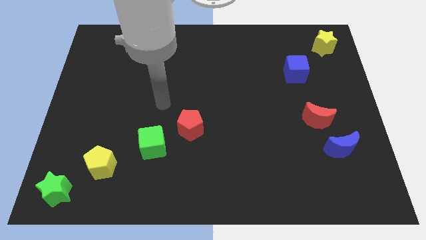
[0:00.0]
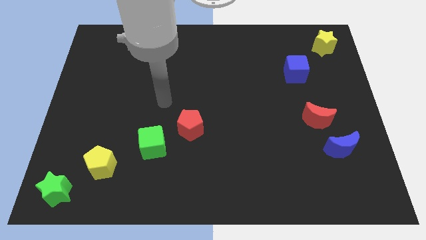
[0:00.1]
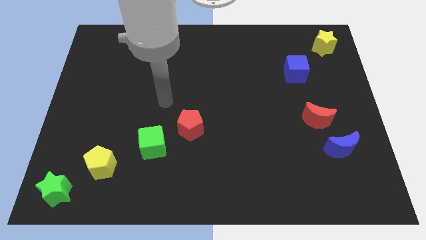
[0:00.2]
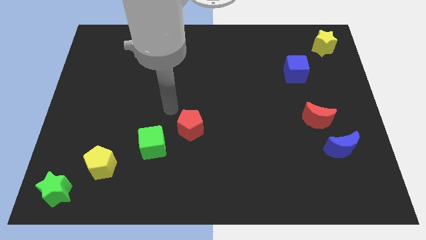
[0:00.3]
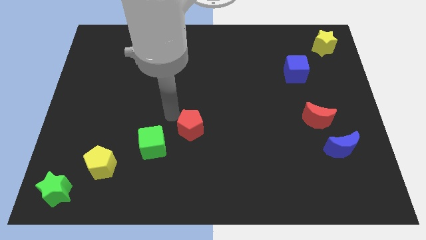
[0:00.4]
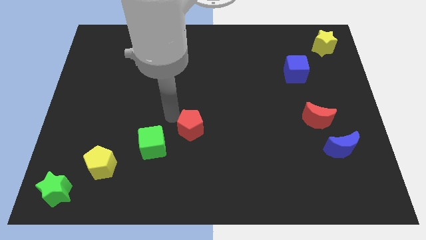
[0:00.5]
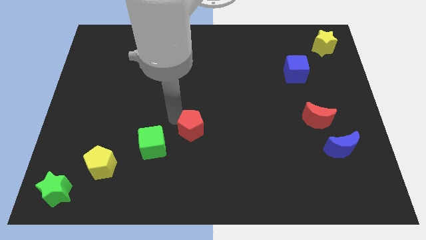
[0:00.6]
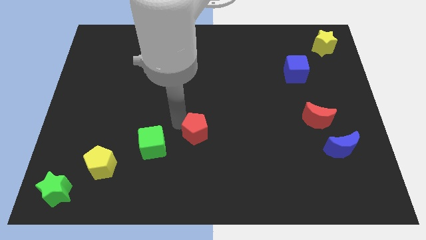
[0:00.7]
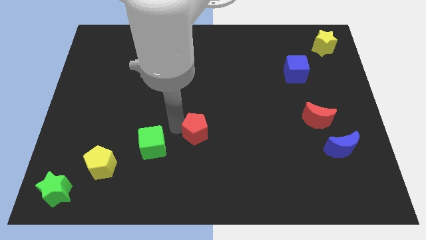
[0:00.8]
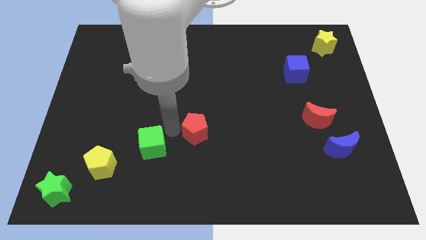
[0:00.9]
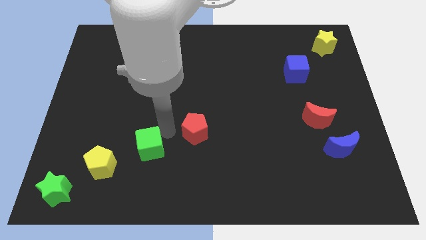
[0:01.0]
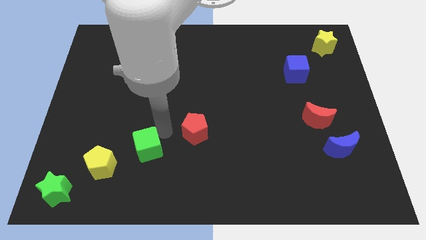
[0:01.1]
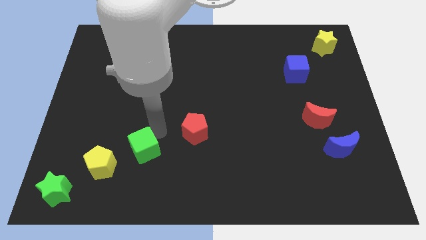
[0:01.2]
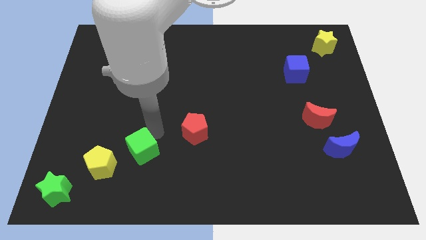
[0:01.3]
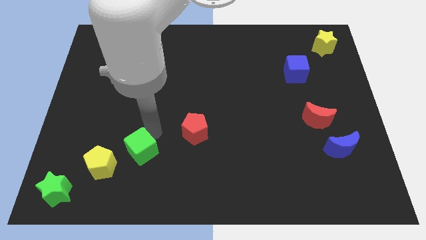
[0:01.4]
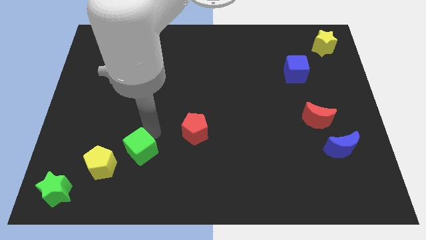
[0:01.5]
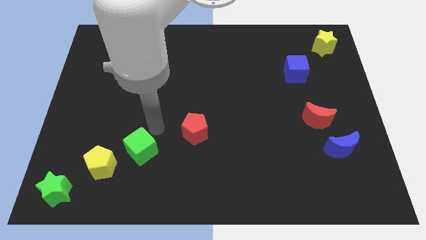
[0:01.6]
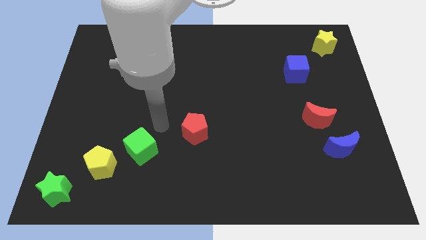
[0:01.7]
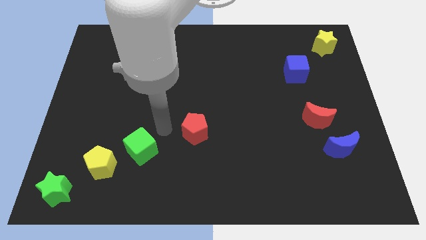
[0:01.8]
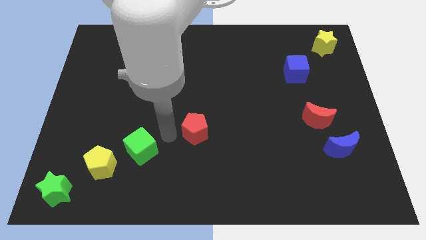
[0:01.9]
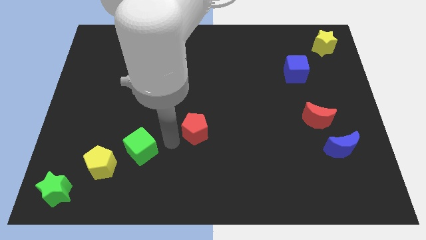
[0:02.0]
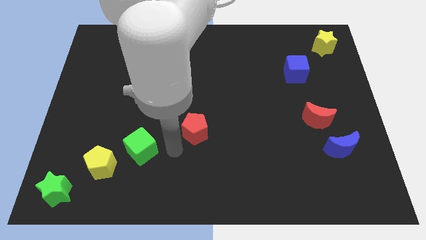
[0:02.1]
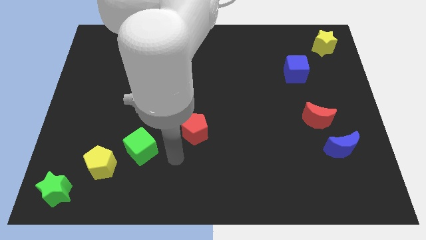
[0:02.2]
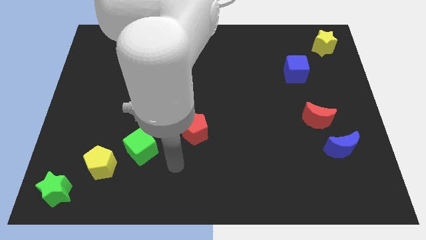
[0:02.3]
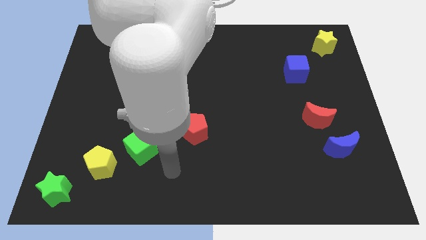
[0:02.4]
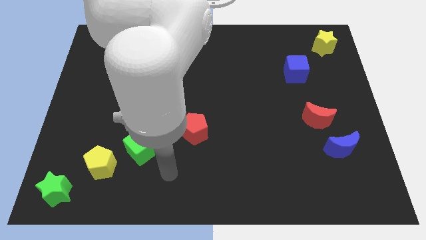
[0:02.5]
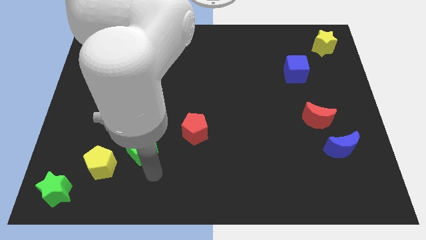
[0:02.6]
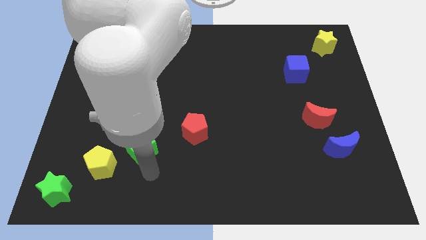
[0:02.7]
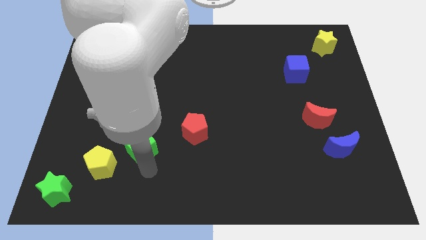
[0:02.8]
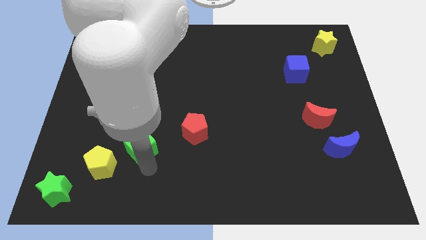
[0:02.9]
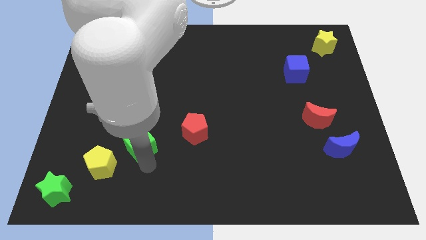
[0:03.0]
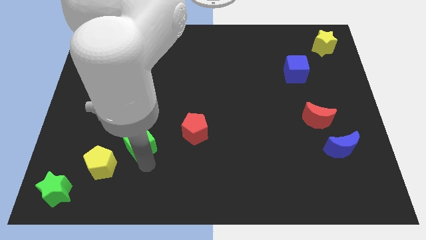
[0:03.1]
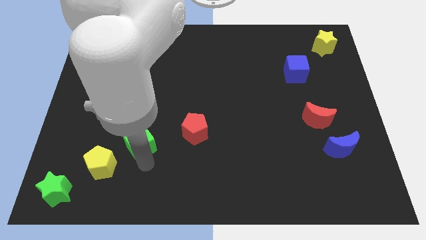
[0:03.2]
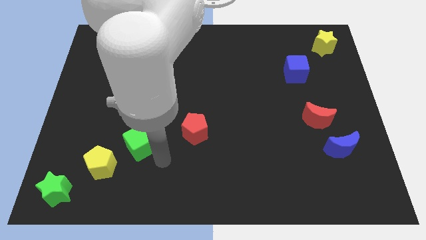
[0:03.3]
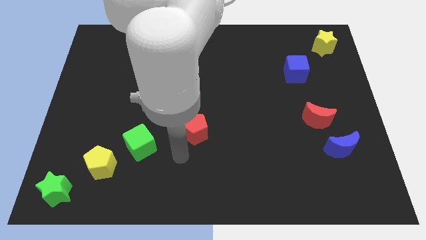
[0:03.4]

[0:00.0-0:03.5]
adjust green cube and red pentagon to form a line

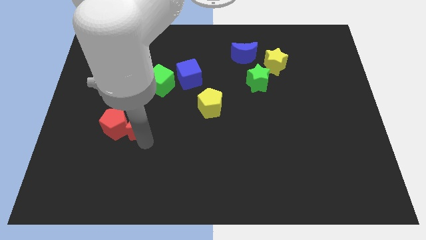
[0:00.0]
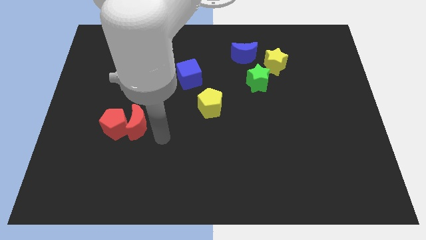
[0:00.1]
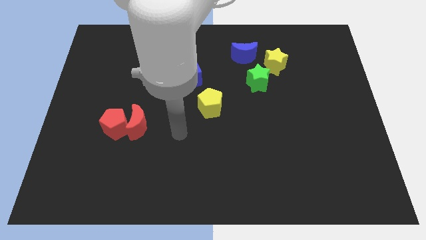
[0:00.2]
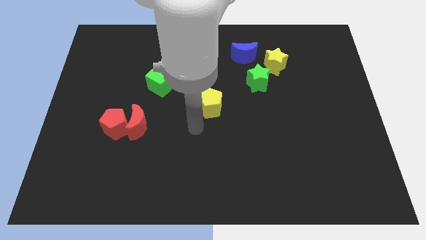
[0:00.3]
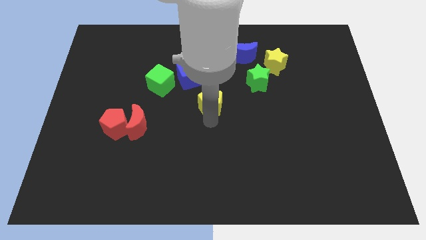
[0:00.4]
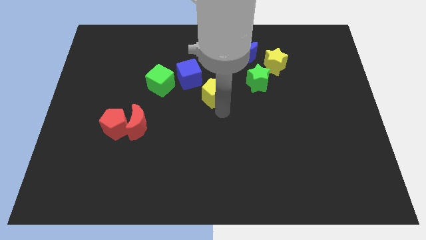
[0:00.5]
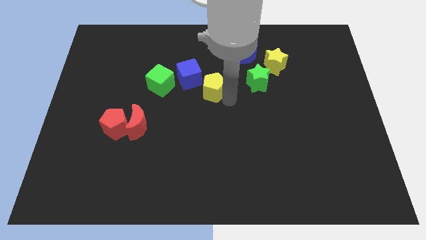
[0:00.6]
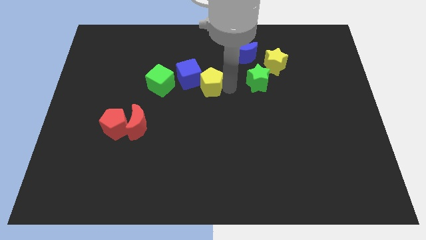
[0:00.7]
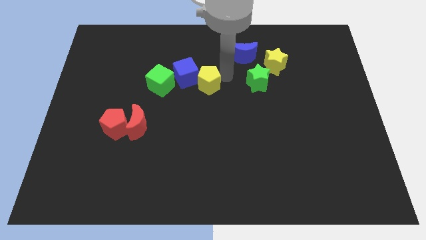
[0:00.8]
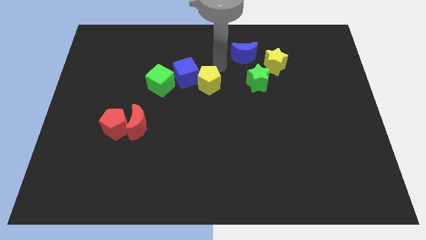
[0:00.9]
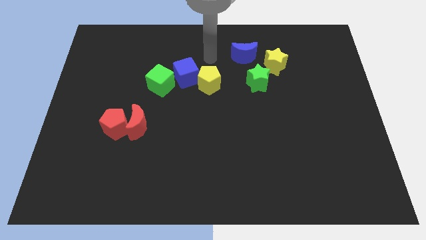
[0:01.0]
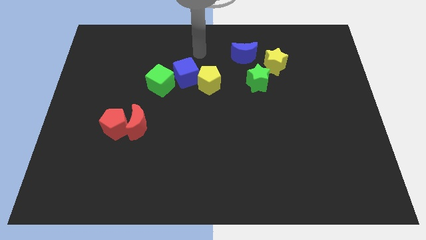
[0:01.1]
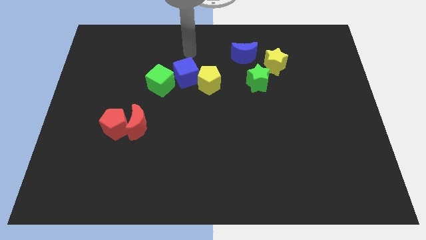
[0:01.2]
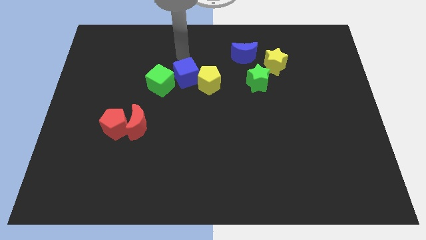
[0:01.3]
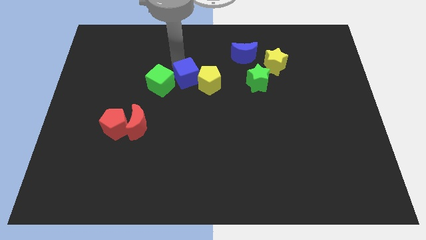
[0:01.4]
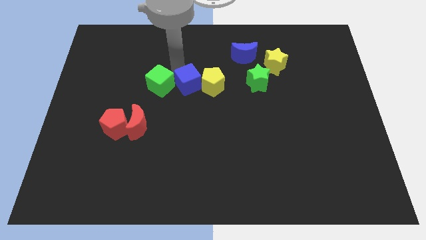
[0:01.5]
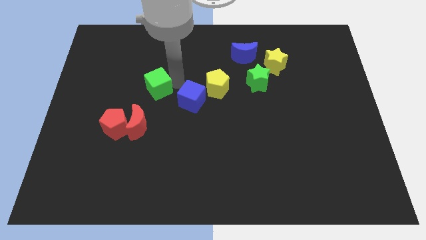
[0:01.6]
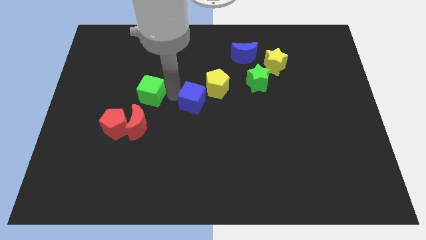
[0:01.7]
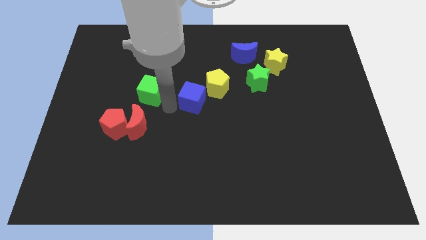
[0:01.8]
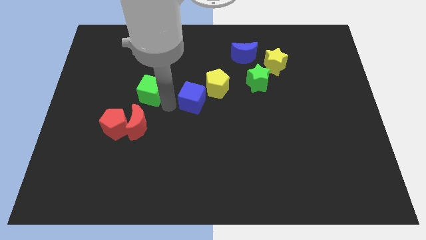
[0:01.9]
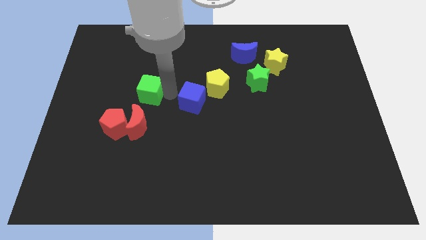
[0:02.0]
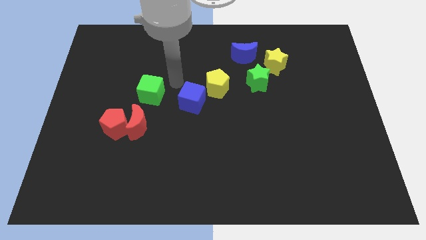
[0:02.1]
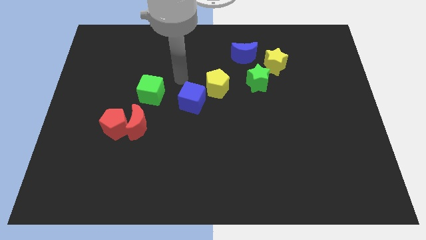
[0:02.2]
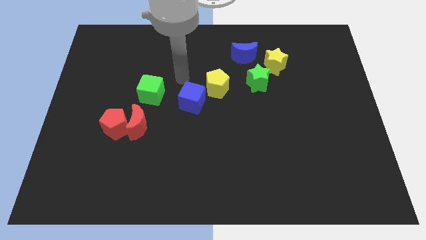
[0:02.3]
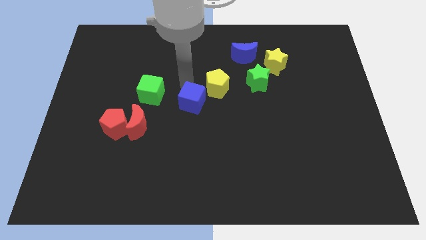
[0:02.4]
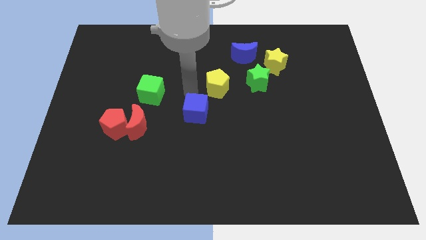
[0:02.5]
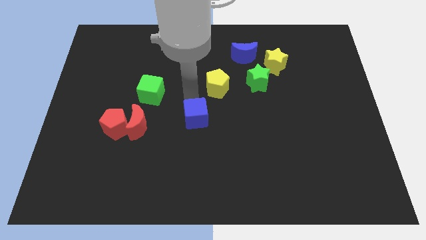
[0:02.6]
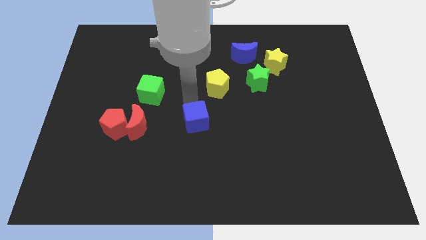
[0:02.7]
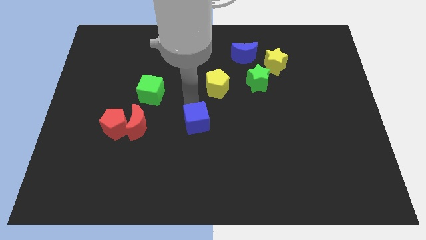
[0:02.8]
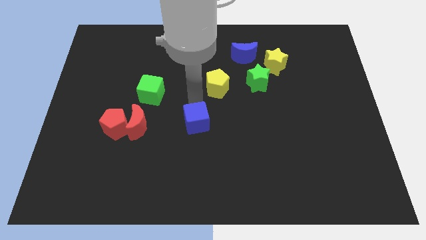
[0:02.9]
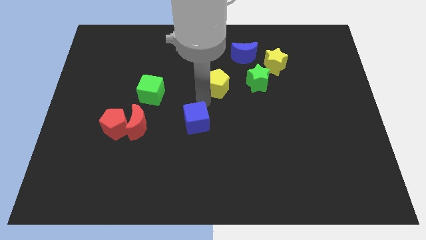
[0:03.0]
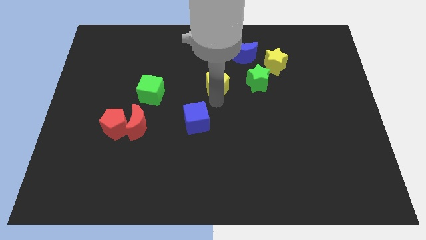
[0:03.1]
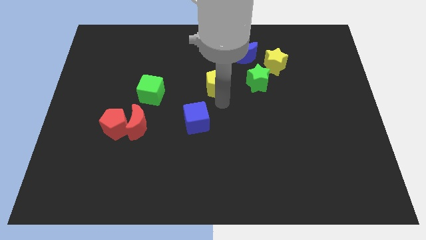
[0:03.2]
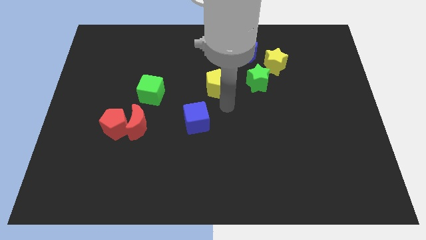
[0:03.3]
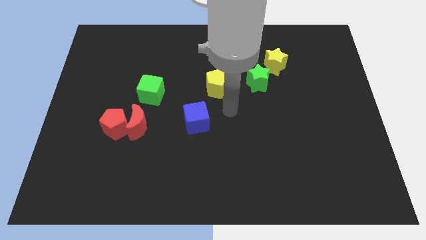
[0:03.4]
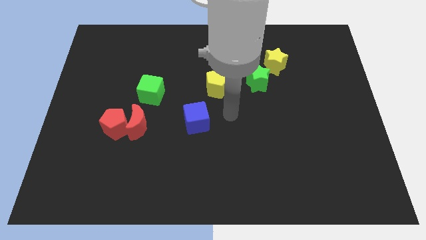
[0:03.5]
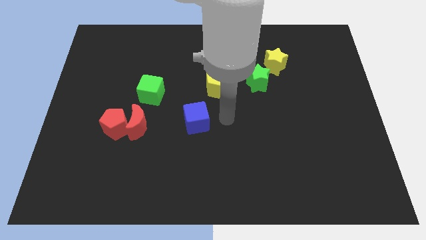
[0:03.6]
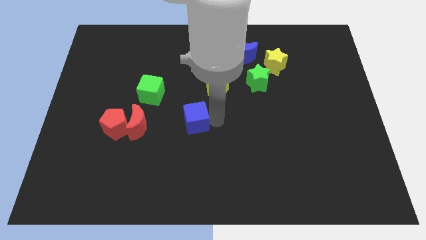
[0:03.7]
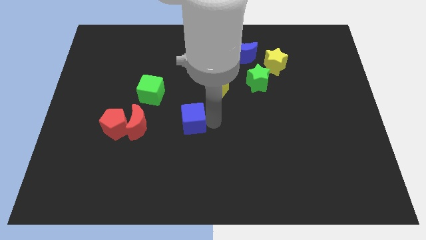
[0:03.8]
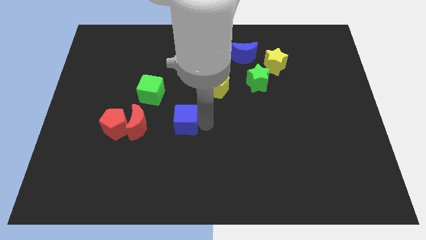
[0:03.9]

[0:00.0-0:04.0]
push the blue cube to the right of the red crescent

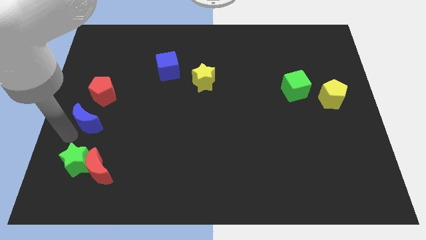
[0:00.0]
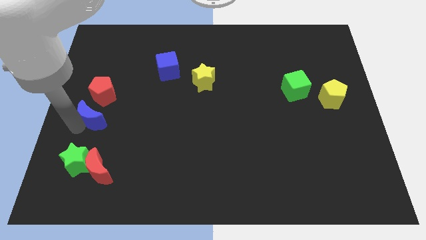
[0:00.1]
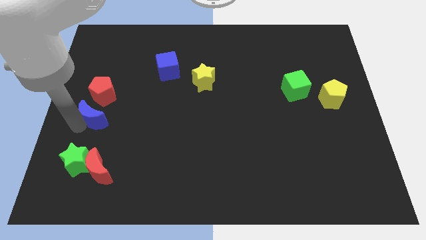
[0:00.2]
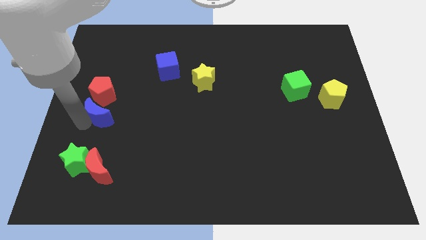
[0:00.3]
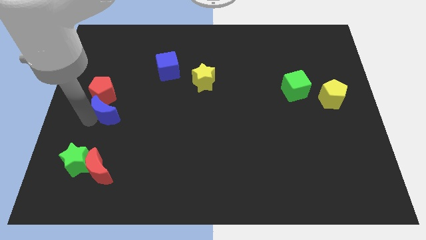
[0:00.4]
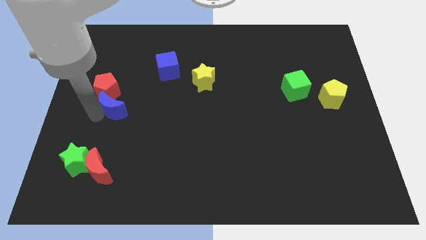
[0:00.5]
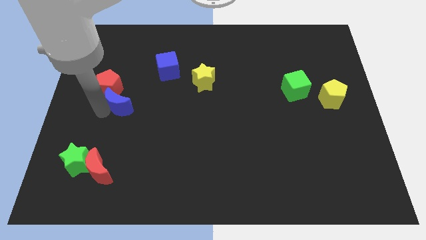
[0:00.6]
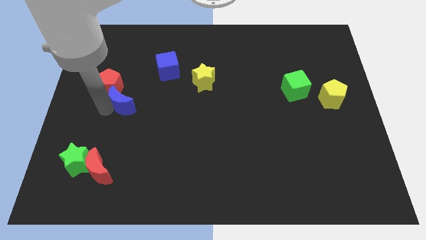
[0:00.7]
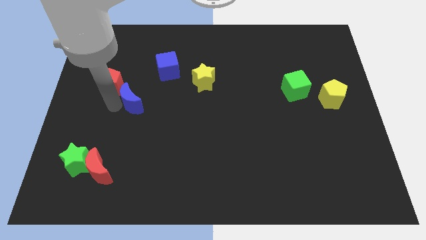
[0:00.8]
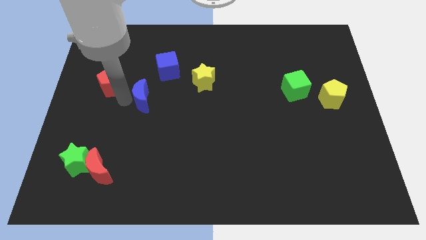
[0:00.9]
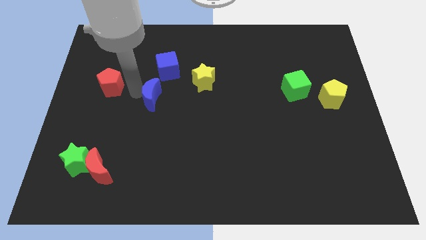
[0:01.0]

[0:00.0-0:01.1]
push the red pentagon with the blue moon

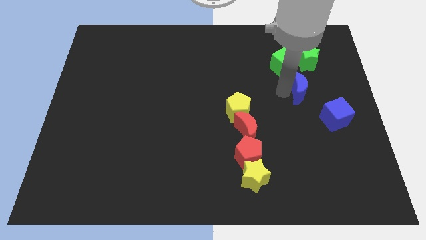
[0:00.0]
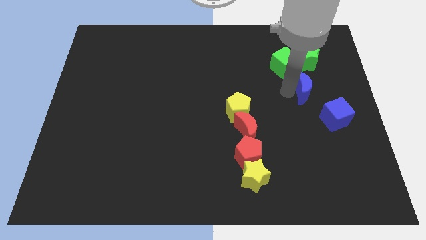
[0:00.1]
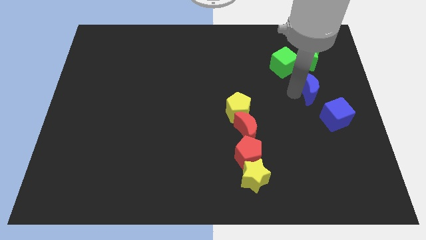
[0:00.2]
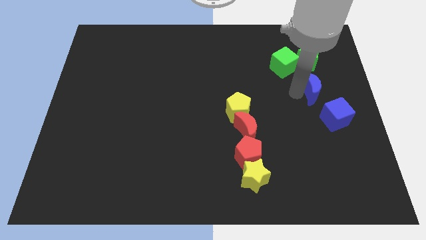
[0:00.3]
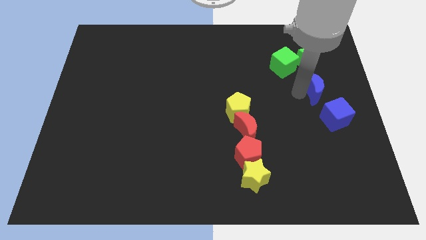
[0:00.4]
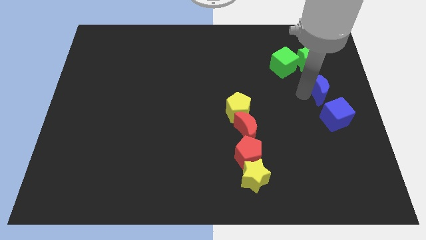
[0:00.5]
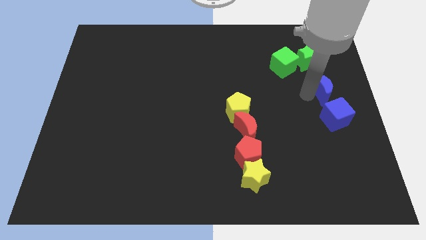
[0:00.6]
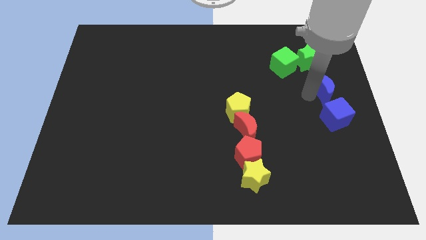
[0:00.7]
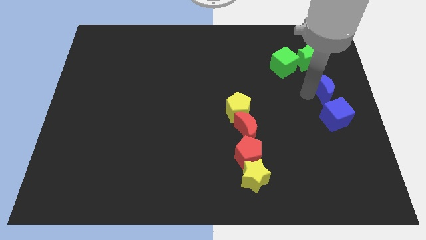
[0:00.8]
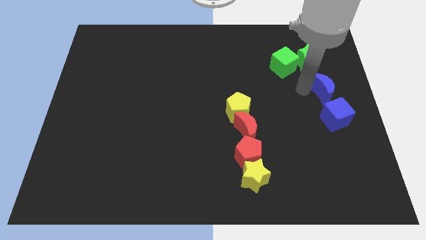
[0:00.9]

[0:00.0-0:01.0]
place the blue moon above the blue cube
